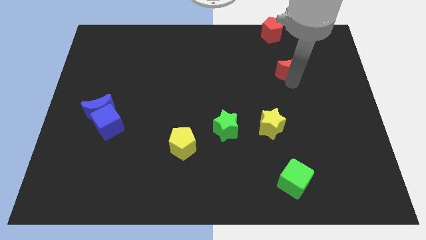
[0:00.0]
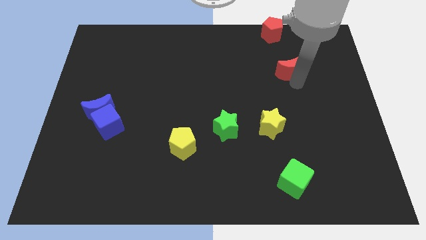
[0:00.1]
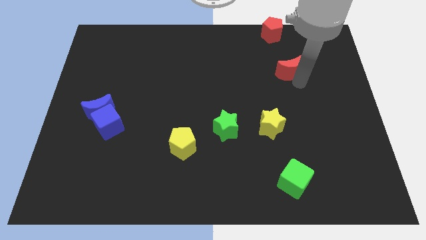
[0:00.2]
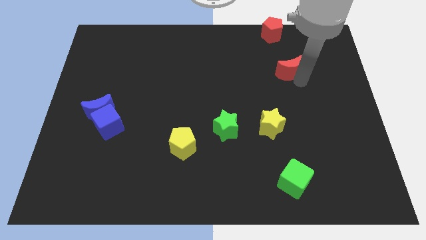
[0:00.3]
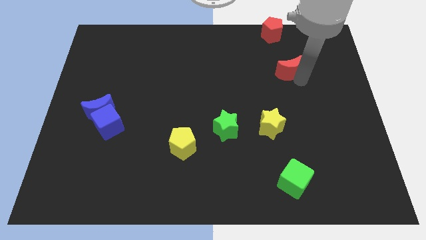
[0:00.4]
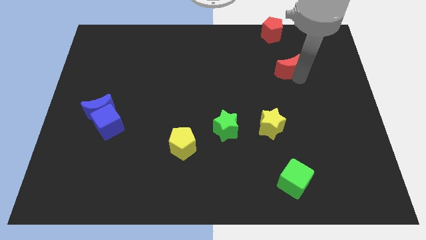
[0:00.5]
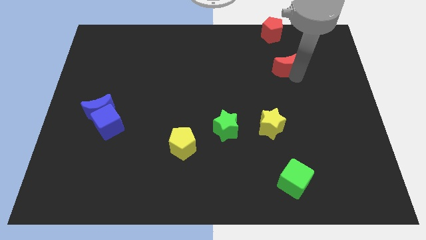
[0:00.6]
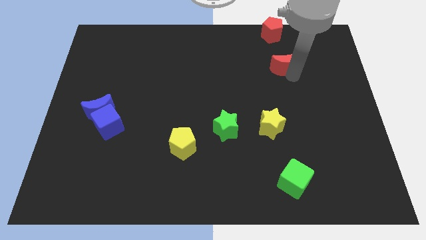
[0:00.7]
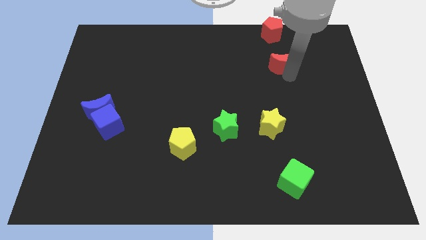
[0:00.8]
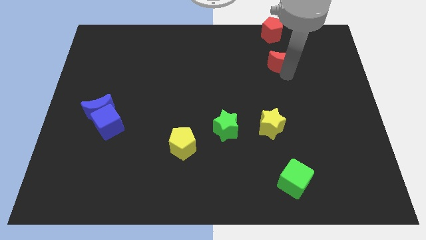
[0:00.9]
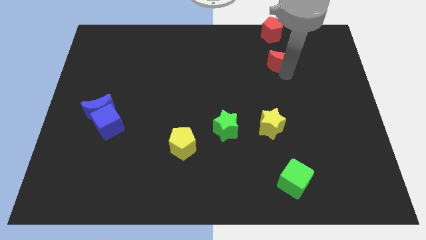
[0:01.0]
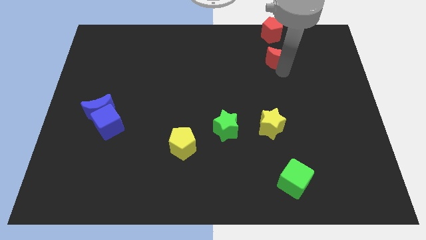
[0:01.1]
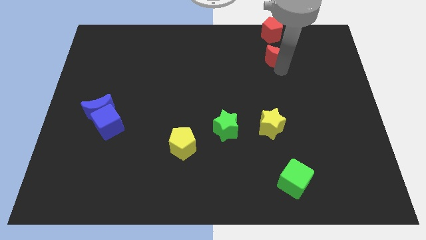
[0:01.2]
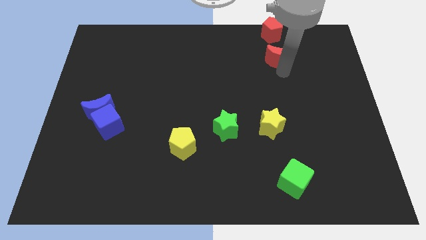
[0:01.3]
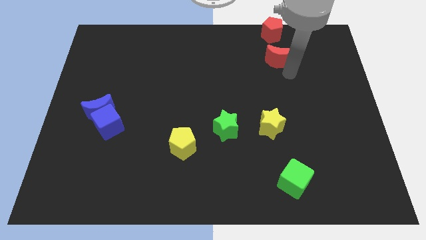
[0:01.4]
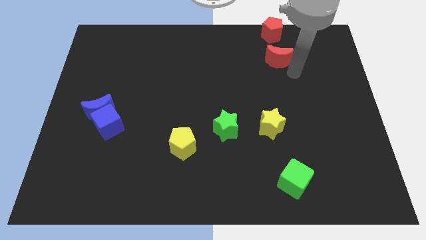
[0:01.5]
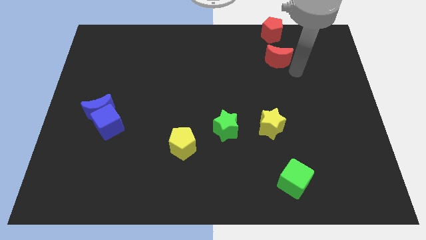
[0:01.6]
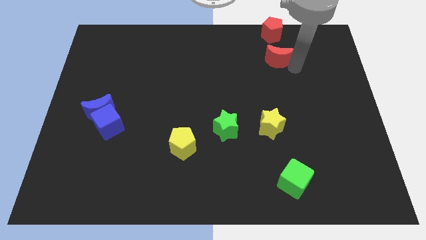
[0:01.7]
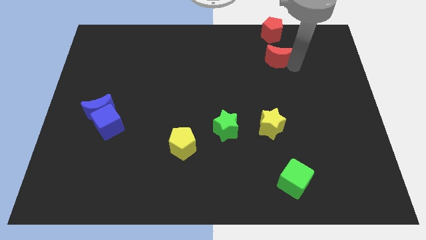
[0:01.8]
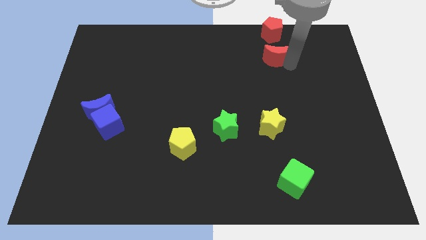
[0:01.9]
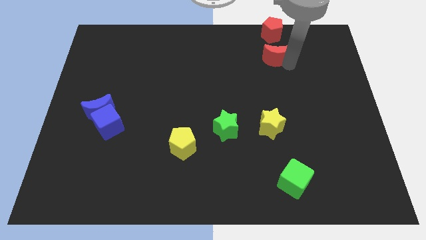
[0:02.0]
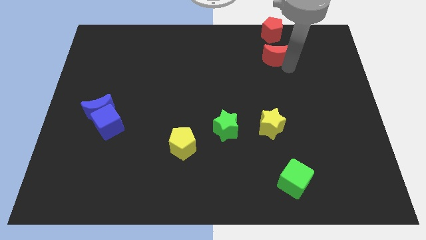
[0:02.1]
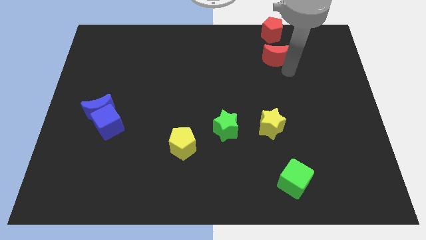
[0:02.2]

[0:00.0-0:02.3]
push the red crescent into the red pentagon

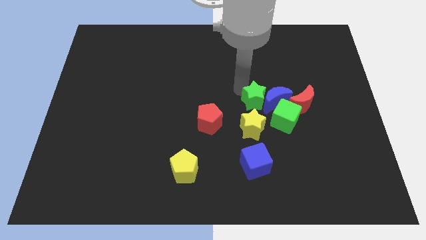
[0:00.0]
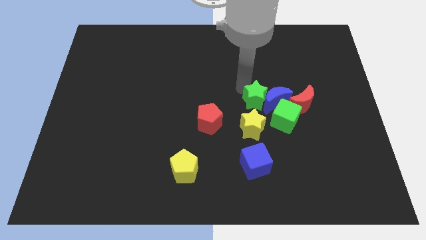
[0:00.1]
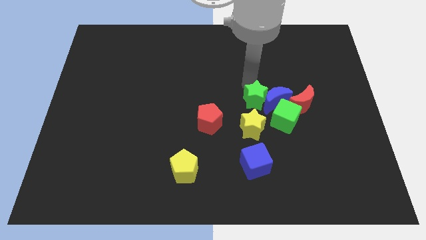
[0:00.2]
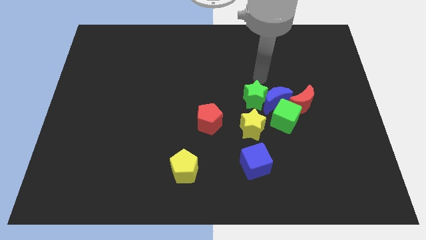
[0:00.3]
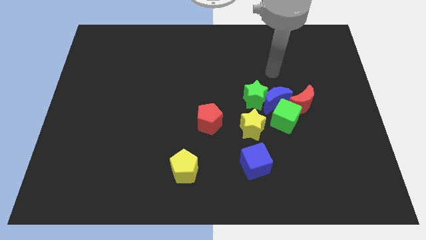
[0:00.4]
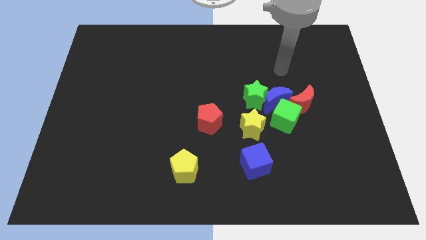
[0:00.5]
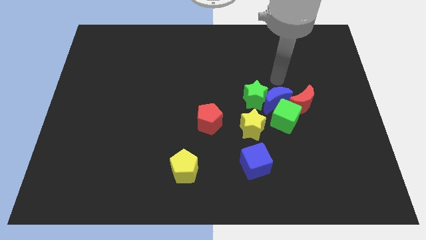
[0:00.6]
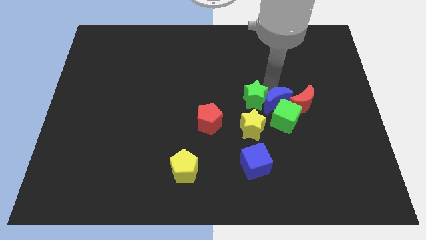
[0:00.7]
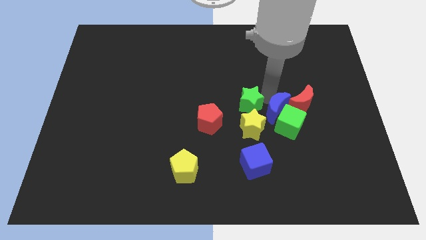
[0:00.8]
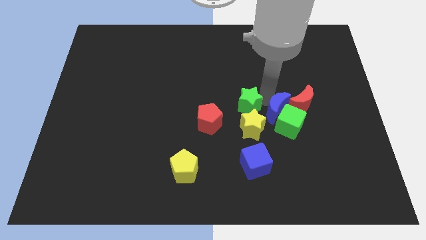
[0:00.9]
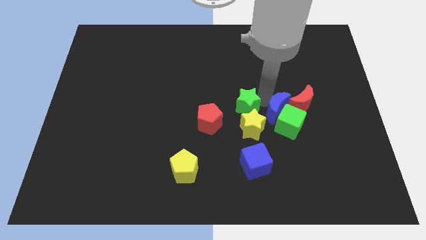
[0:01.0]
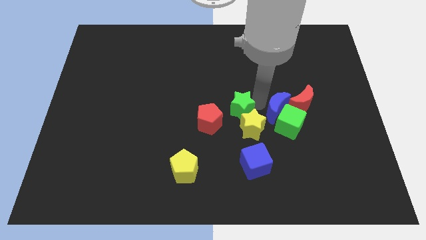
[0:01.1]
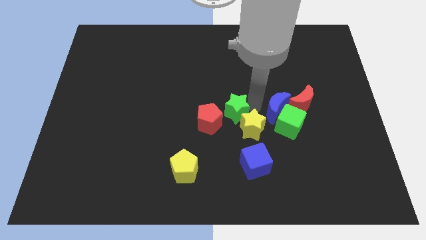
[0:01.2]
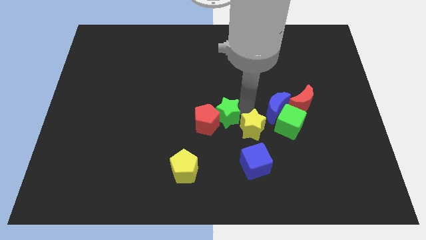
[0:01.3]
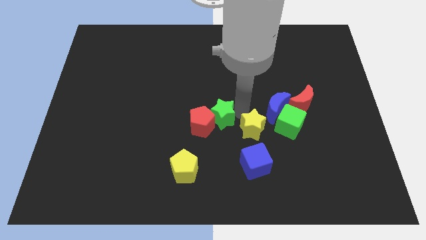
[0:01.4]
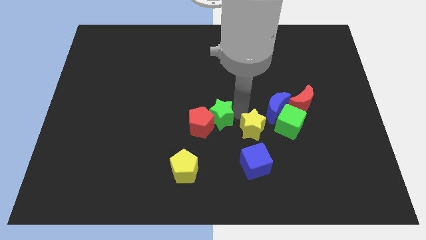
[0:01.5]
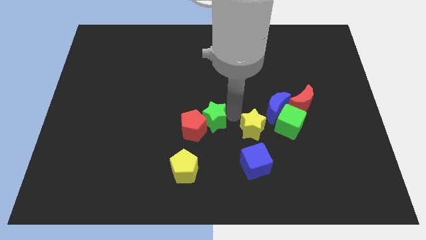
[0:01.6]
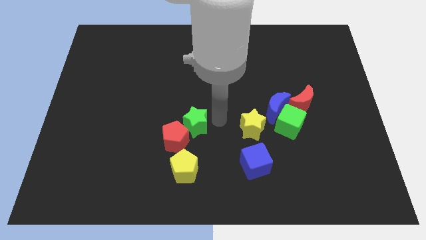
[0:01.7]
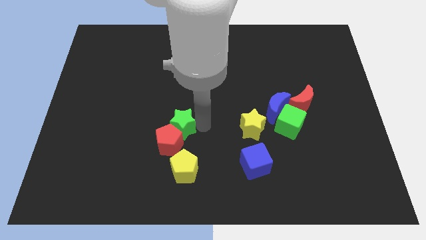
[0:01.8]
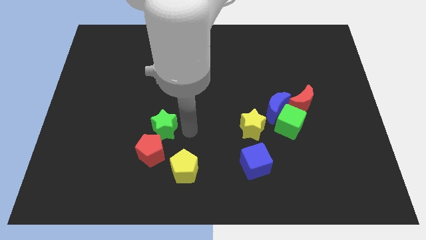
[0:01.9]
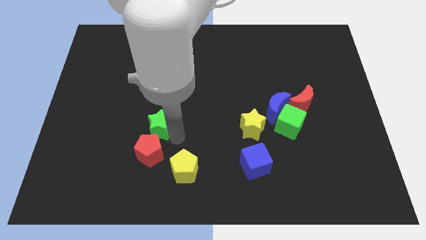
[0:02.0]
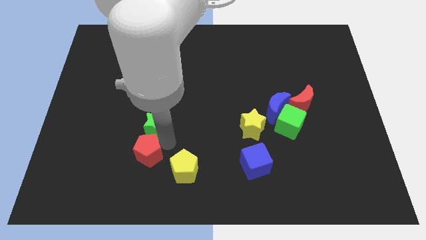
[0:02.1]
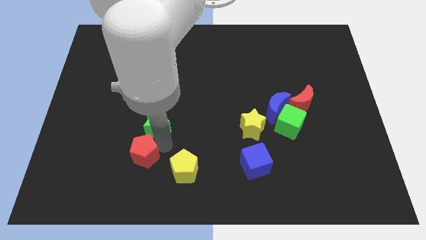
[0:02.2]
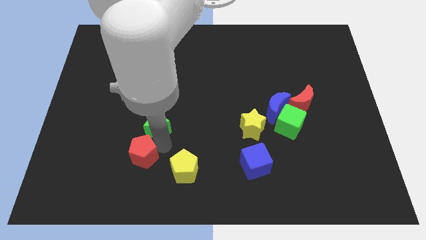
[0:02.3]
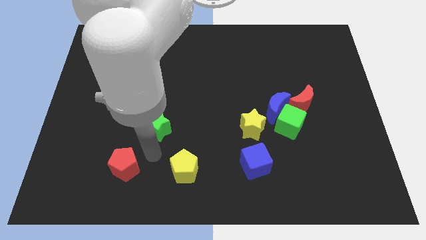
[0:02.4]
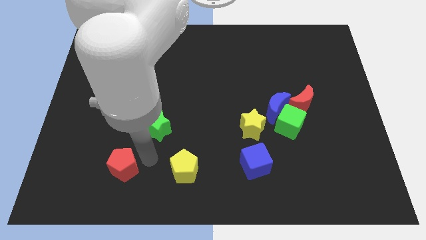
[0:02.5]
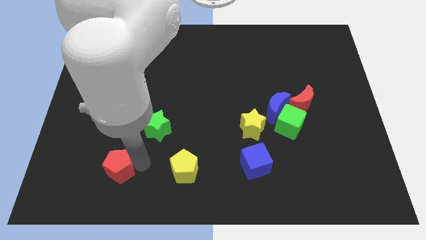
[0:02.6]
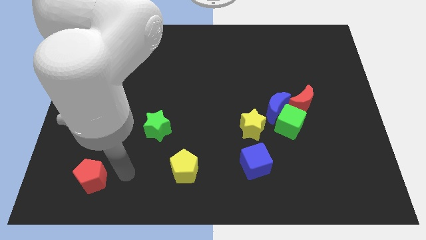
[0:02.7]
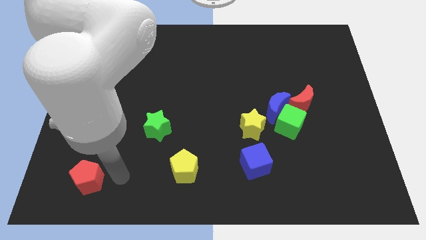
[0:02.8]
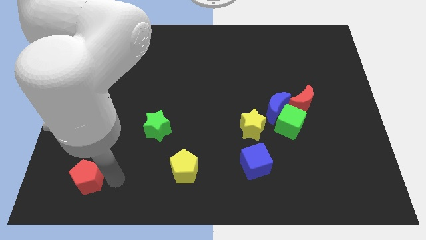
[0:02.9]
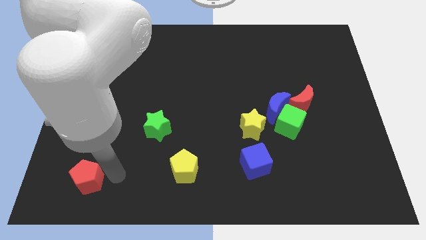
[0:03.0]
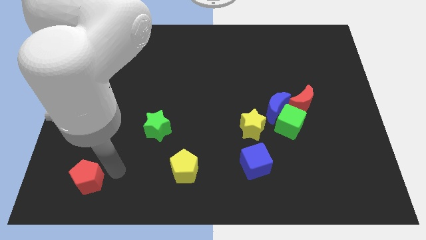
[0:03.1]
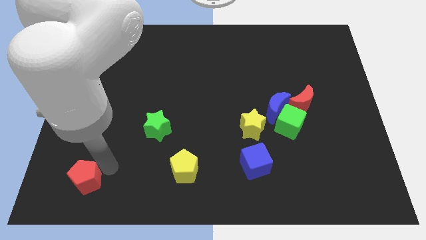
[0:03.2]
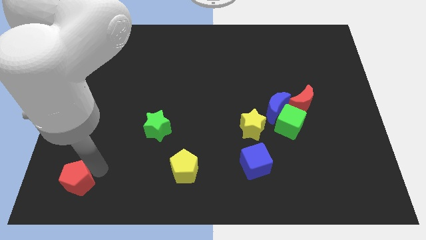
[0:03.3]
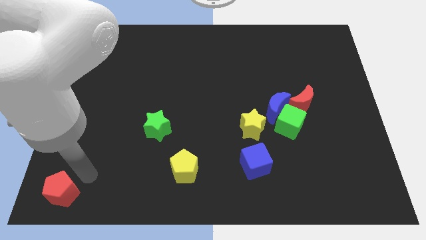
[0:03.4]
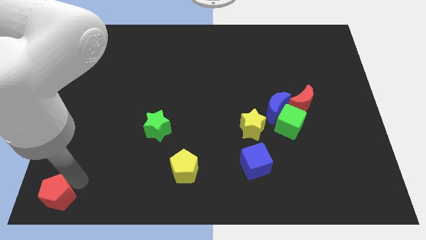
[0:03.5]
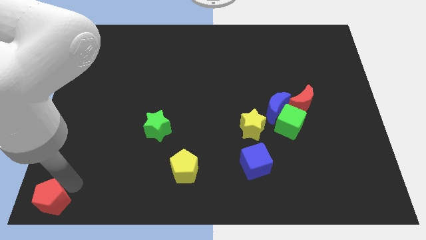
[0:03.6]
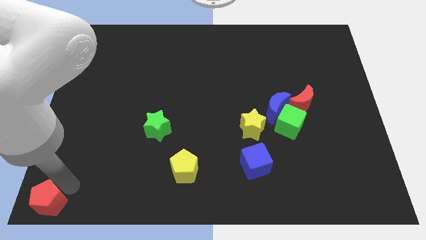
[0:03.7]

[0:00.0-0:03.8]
place the red pentagon at bottom left

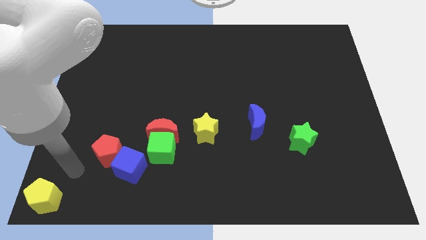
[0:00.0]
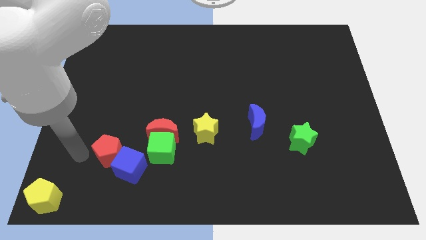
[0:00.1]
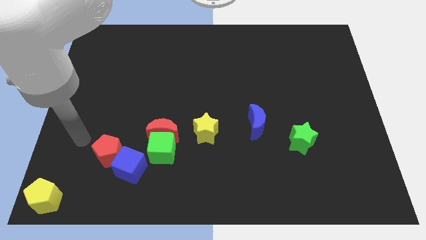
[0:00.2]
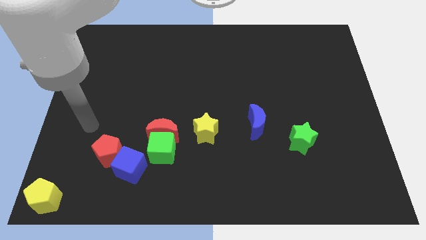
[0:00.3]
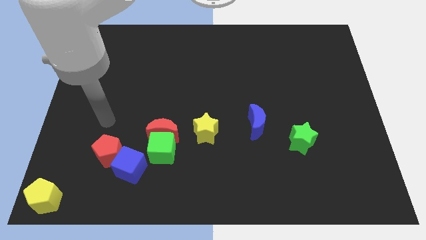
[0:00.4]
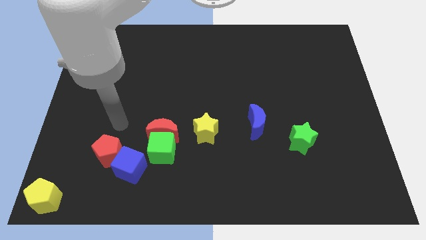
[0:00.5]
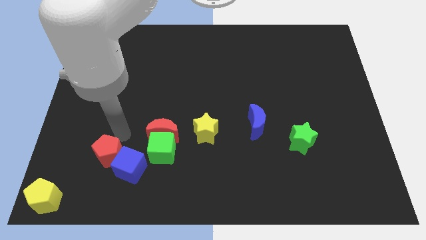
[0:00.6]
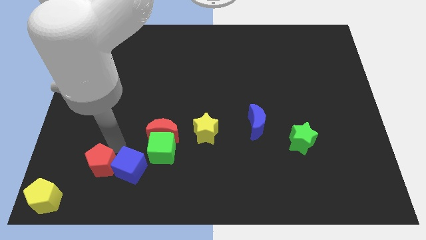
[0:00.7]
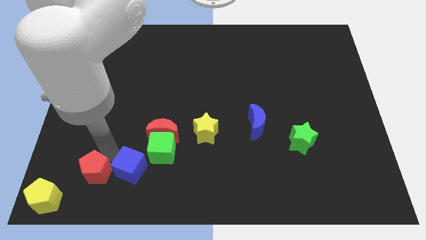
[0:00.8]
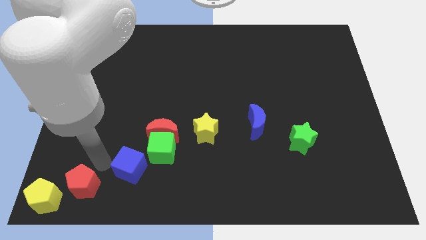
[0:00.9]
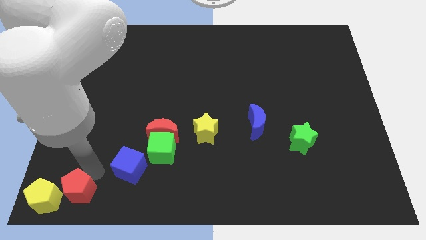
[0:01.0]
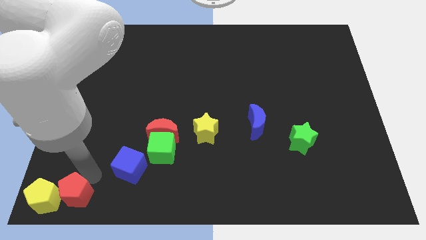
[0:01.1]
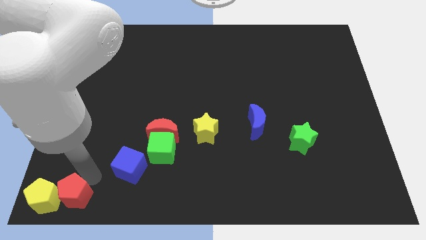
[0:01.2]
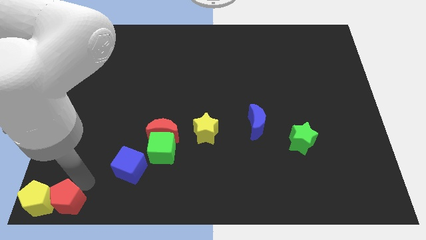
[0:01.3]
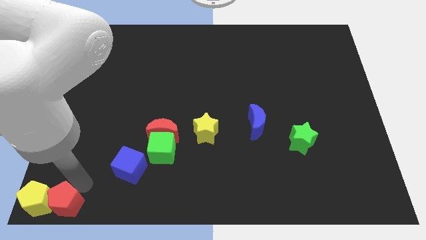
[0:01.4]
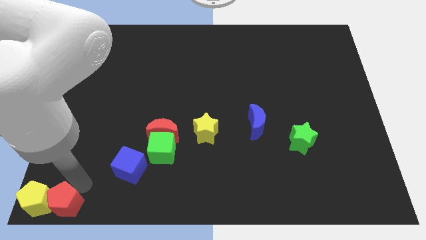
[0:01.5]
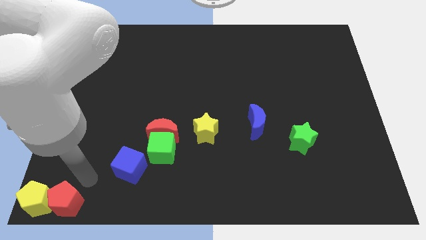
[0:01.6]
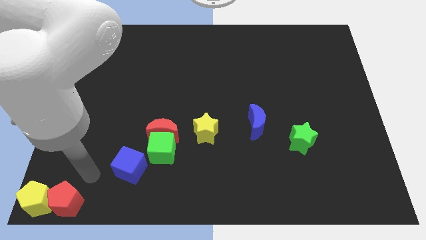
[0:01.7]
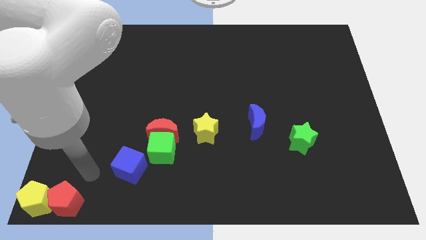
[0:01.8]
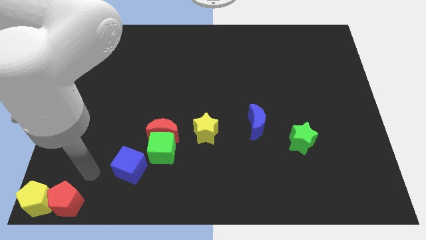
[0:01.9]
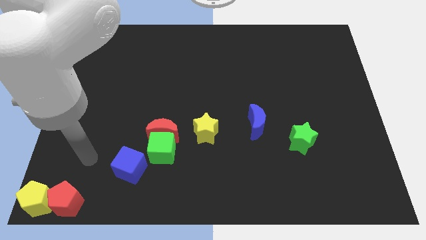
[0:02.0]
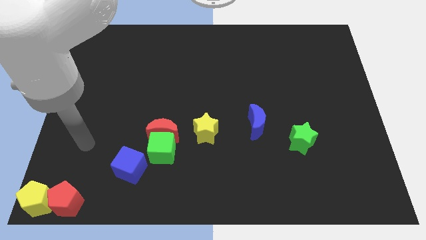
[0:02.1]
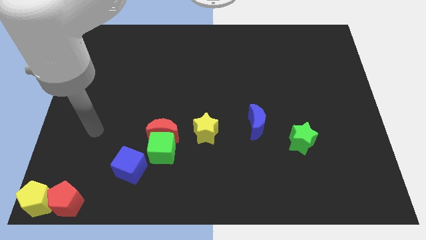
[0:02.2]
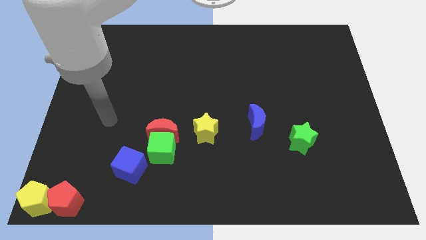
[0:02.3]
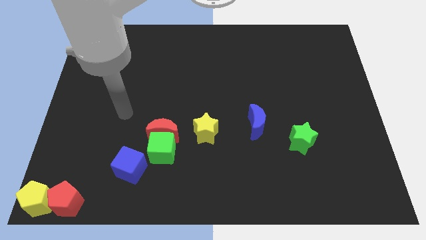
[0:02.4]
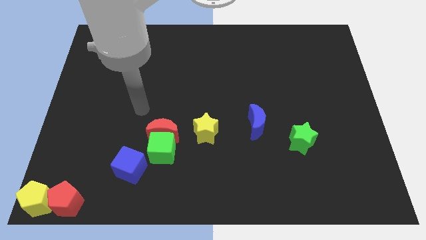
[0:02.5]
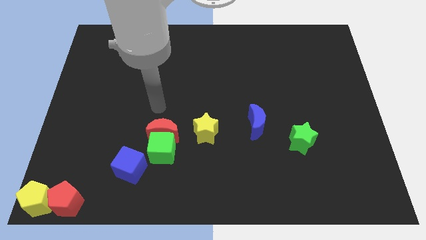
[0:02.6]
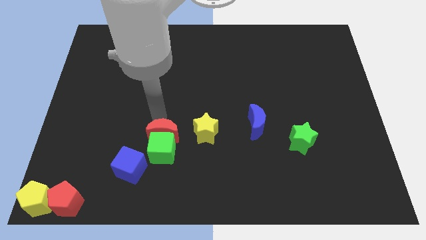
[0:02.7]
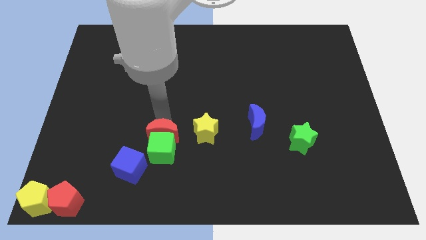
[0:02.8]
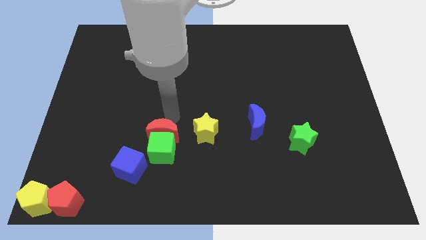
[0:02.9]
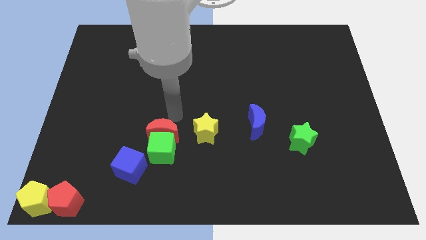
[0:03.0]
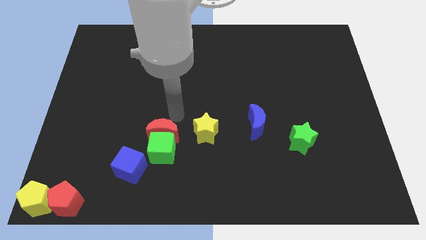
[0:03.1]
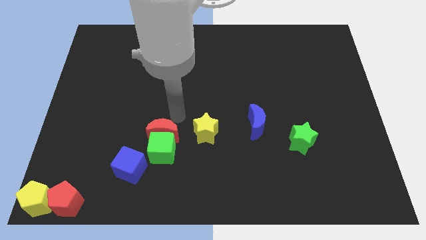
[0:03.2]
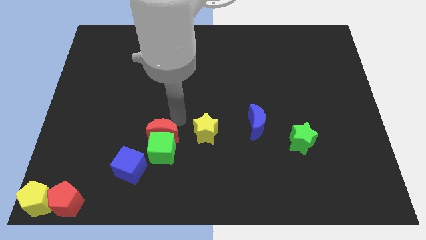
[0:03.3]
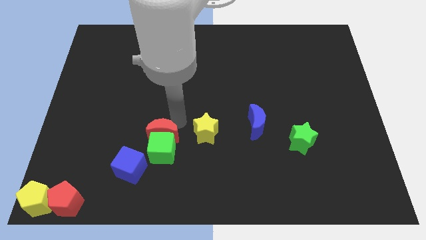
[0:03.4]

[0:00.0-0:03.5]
push the red pentagon into the yellow pentagon
